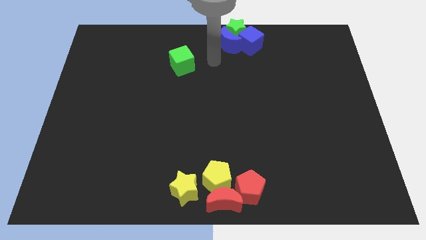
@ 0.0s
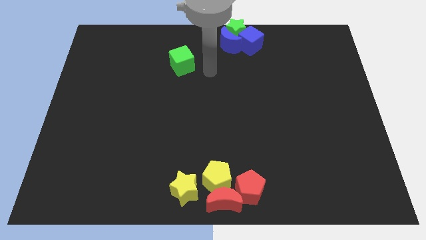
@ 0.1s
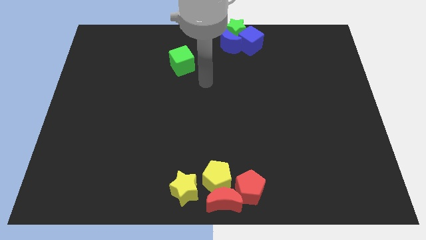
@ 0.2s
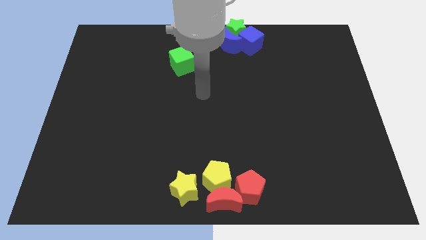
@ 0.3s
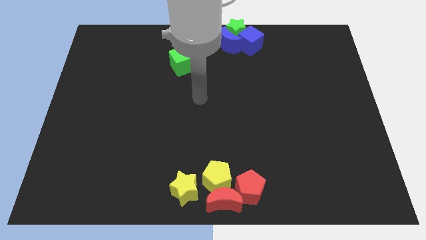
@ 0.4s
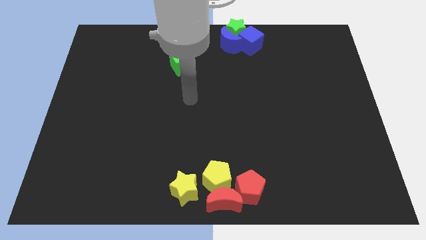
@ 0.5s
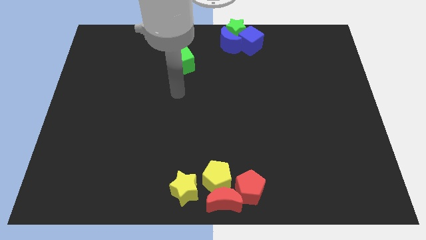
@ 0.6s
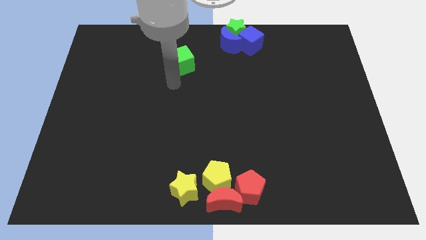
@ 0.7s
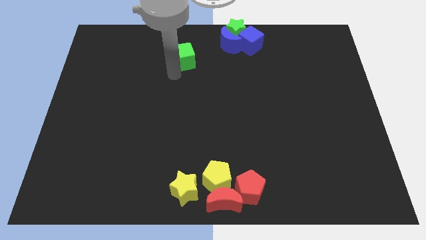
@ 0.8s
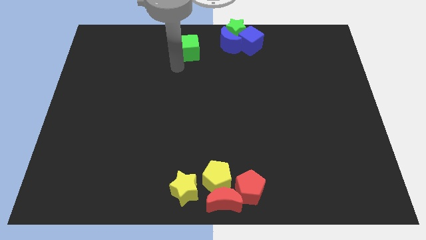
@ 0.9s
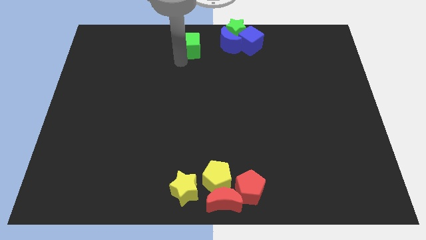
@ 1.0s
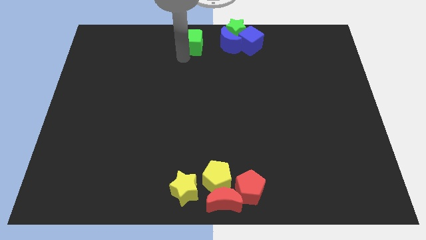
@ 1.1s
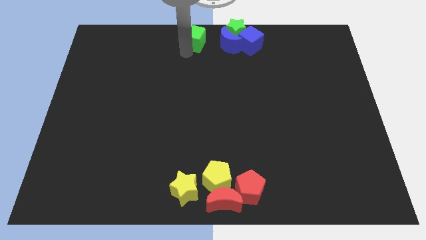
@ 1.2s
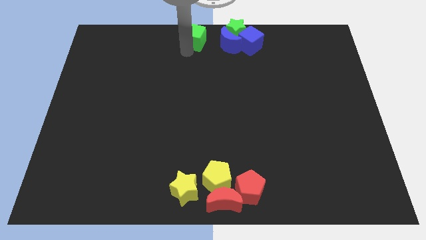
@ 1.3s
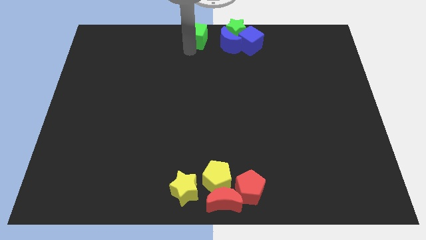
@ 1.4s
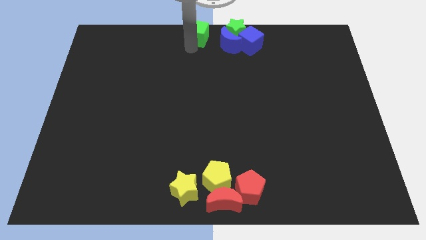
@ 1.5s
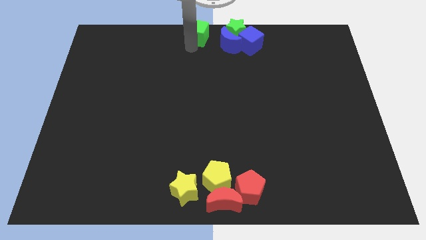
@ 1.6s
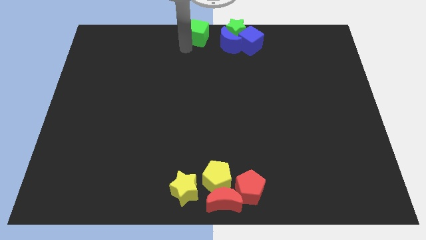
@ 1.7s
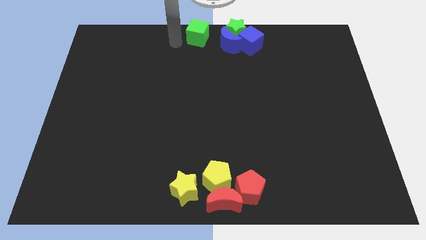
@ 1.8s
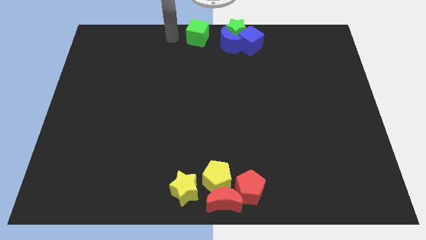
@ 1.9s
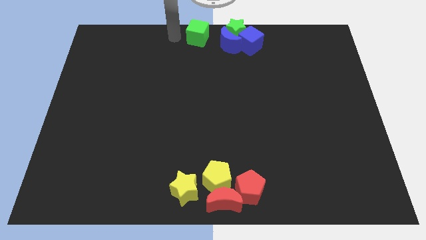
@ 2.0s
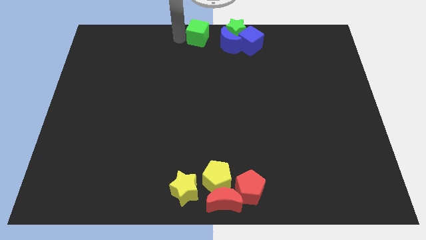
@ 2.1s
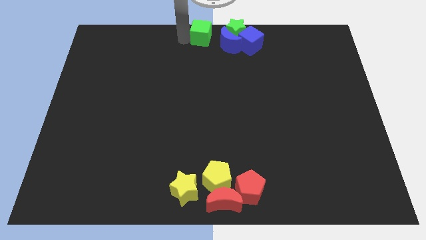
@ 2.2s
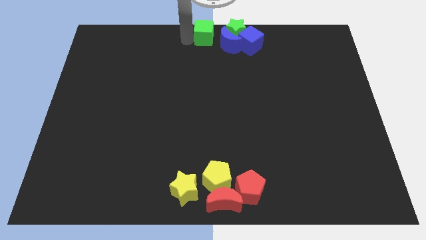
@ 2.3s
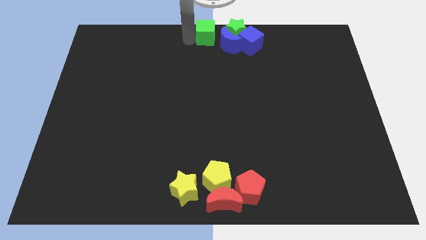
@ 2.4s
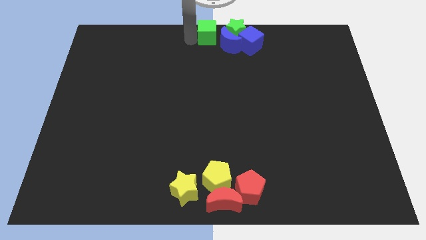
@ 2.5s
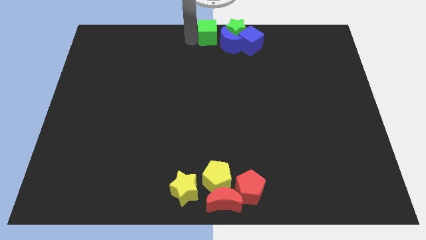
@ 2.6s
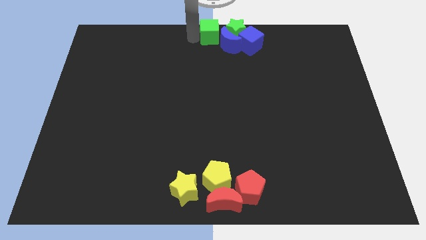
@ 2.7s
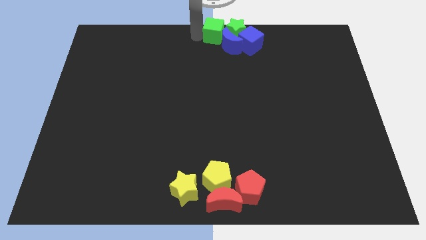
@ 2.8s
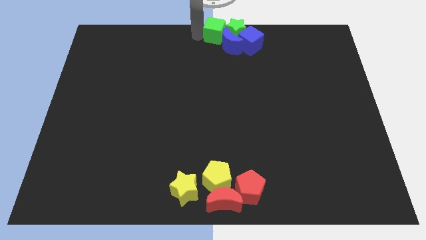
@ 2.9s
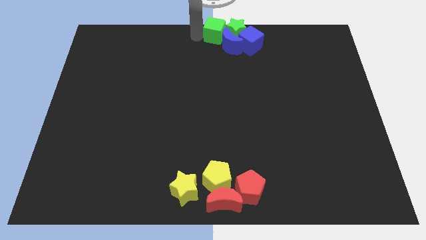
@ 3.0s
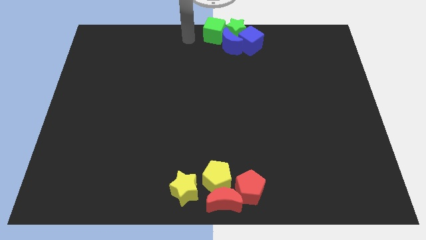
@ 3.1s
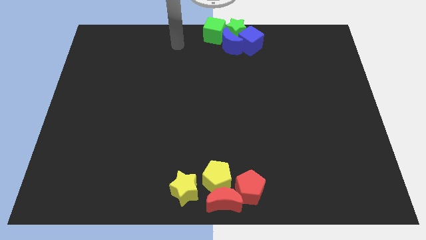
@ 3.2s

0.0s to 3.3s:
push the green cube into the blue crescent to the top center

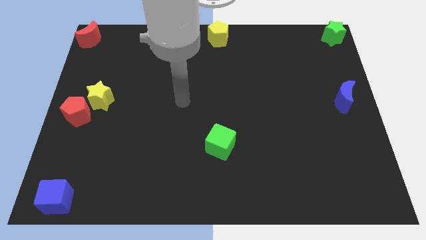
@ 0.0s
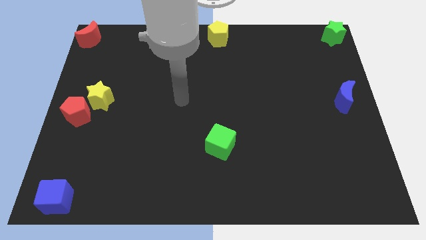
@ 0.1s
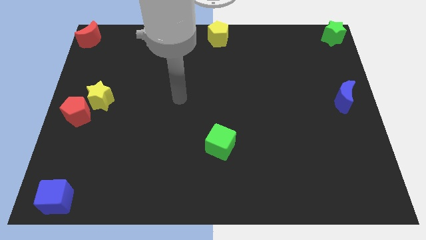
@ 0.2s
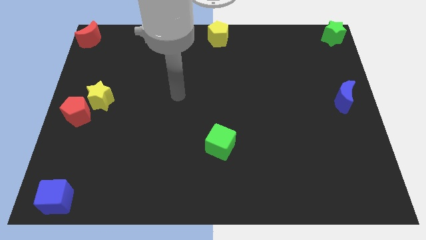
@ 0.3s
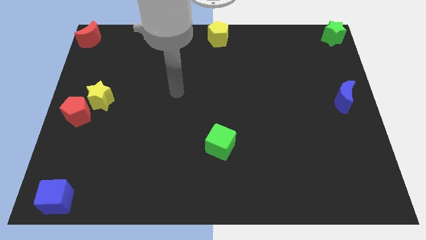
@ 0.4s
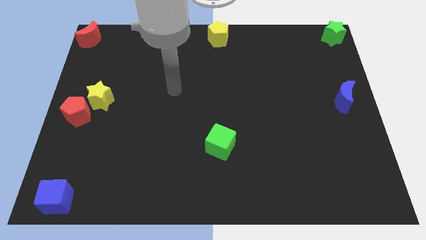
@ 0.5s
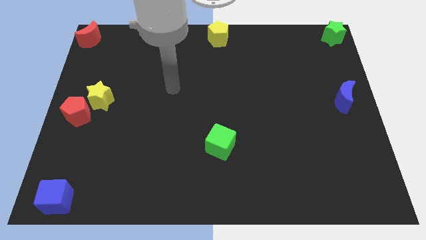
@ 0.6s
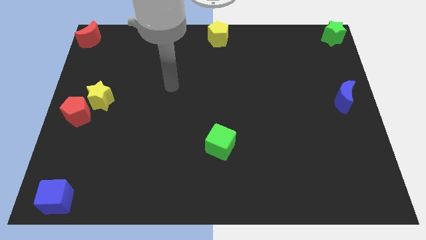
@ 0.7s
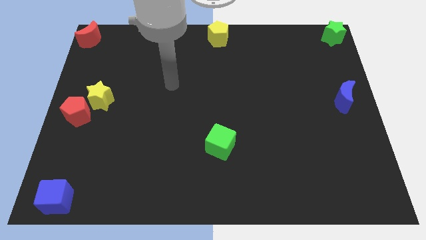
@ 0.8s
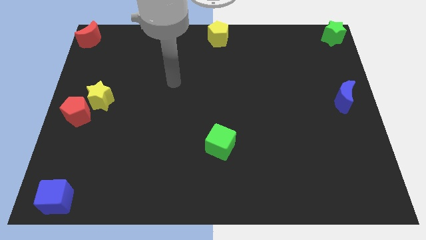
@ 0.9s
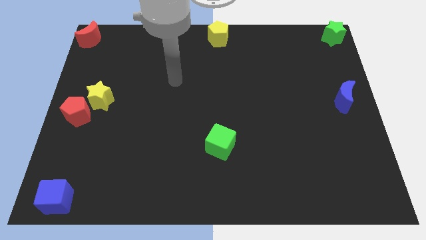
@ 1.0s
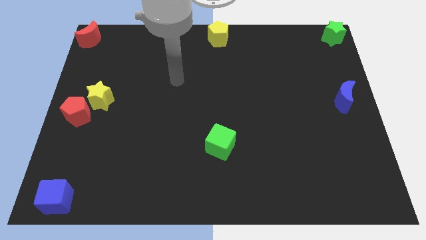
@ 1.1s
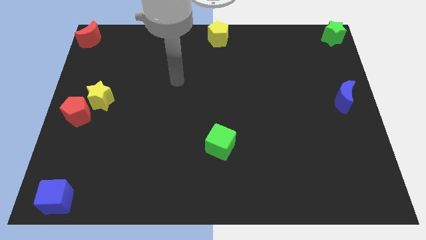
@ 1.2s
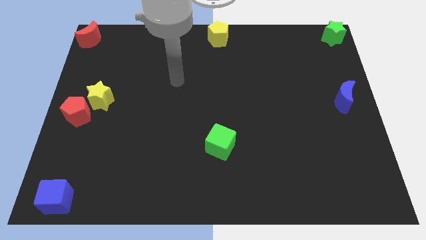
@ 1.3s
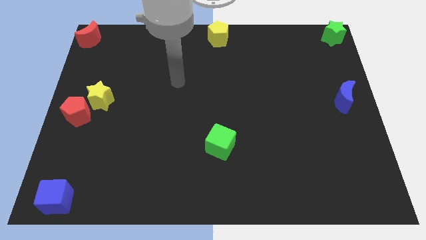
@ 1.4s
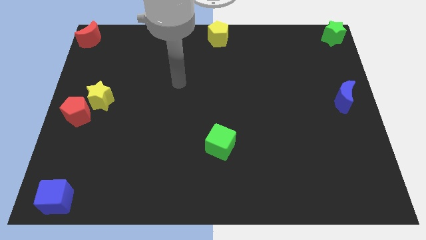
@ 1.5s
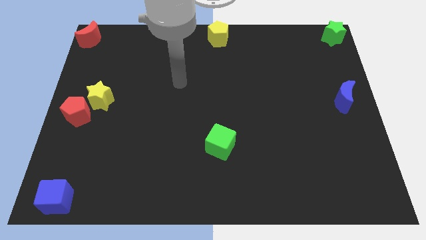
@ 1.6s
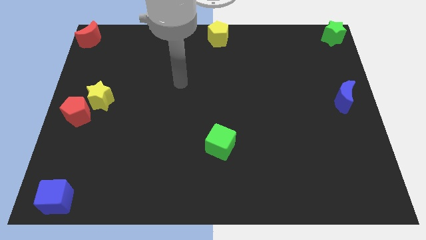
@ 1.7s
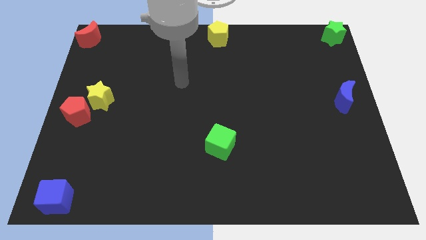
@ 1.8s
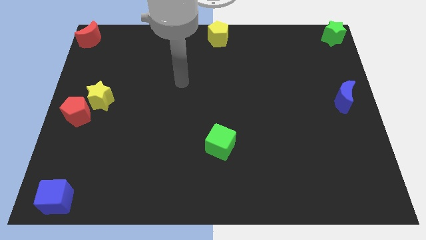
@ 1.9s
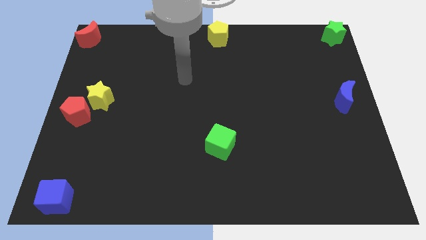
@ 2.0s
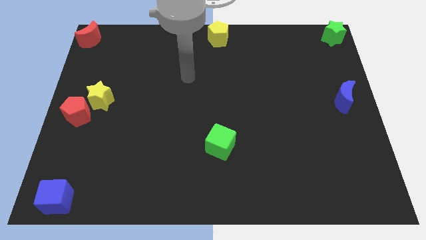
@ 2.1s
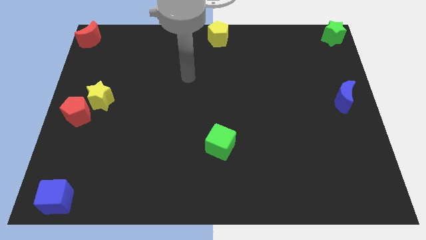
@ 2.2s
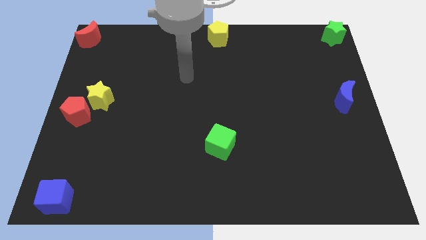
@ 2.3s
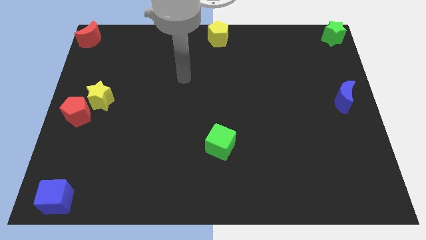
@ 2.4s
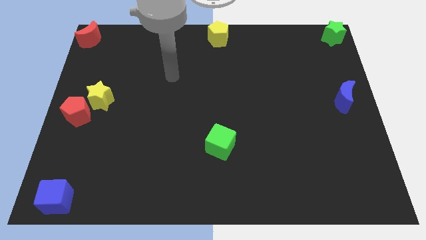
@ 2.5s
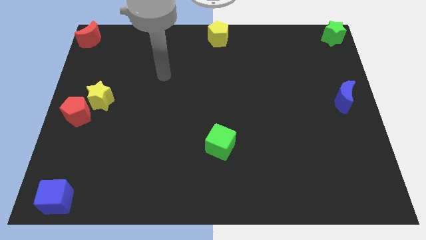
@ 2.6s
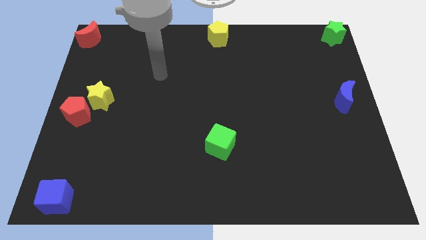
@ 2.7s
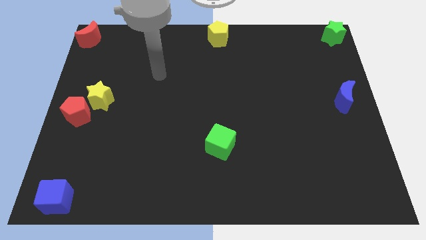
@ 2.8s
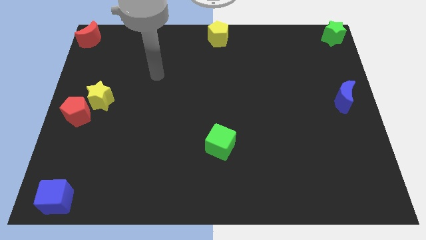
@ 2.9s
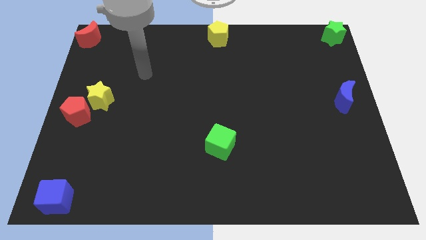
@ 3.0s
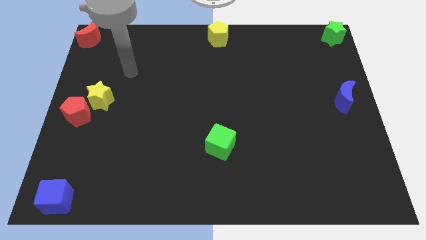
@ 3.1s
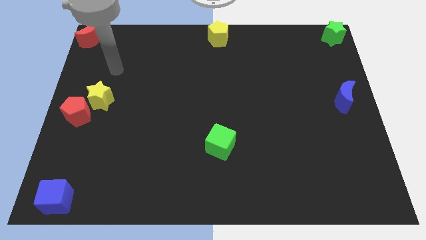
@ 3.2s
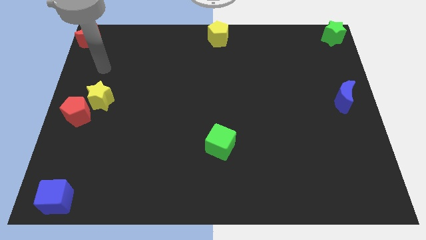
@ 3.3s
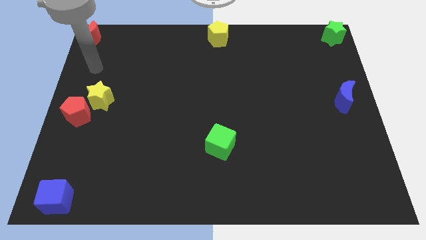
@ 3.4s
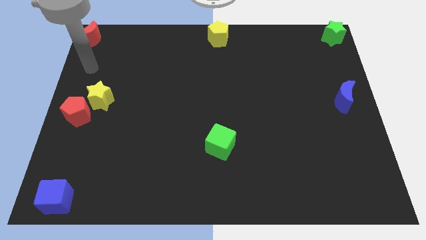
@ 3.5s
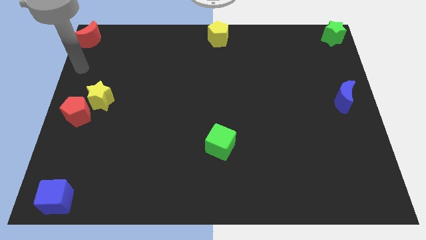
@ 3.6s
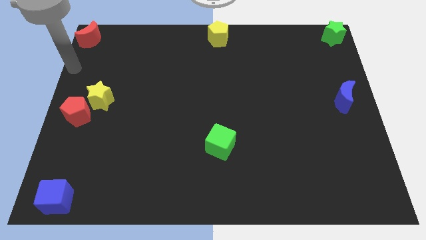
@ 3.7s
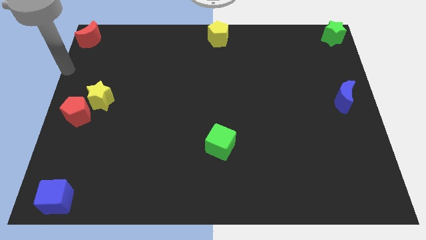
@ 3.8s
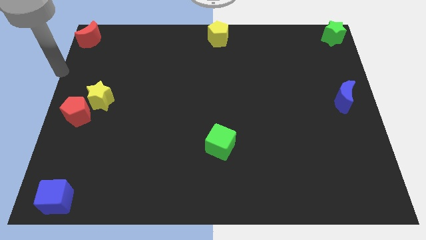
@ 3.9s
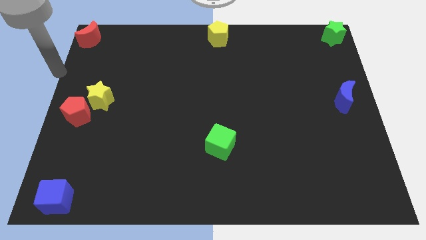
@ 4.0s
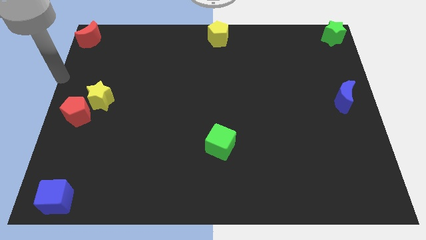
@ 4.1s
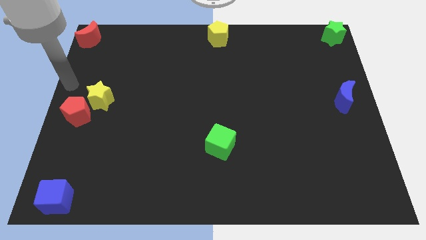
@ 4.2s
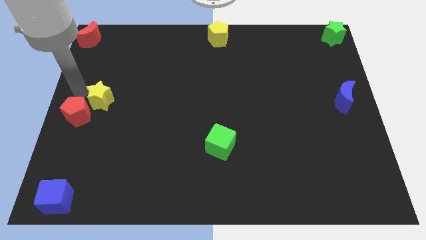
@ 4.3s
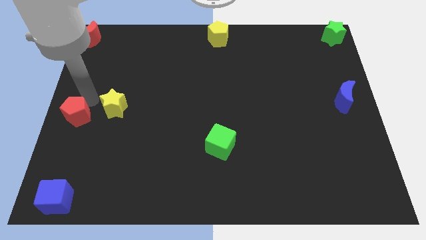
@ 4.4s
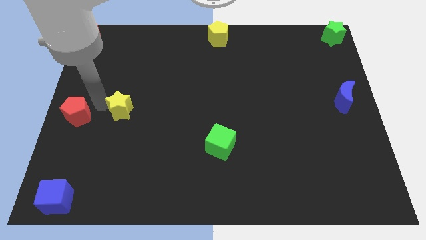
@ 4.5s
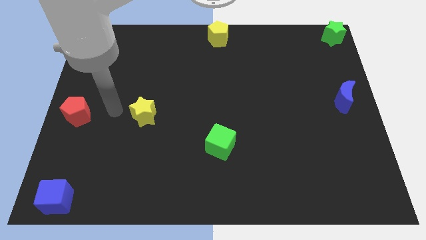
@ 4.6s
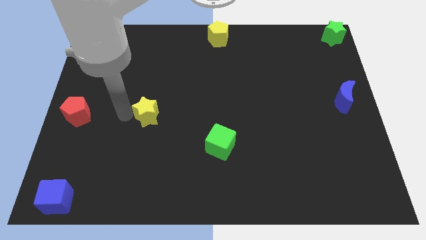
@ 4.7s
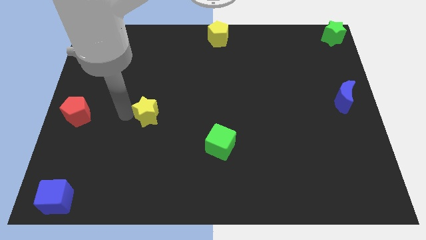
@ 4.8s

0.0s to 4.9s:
separate the yellow star from the red pentagon

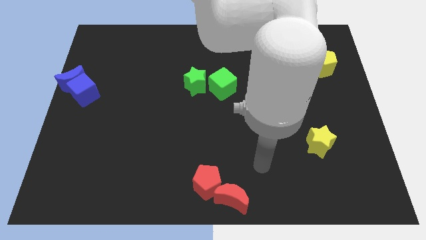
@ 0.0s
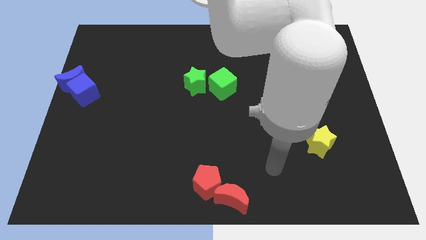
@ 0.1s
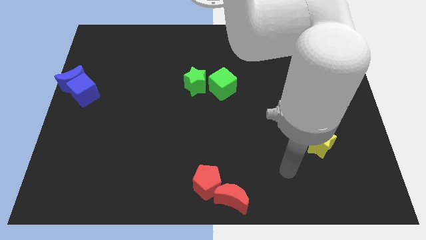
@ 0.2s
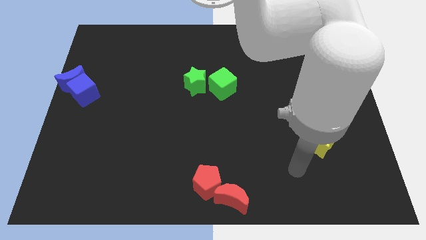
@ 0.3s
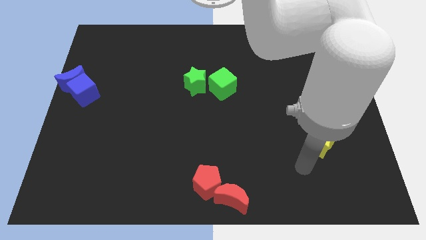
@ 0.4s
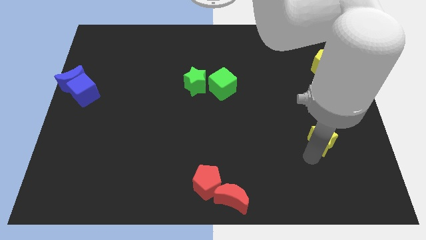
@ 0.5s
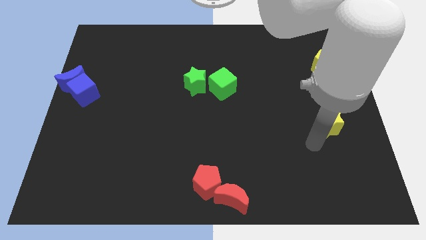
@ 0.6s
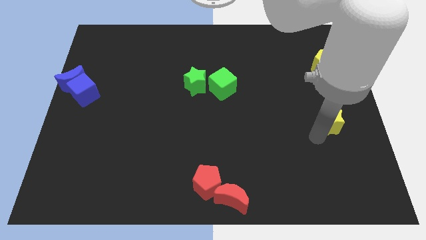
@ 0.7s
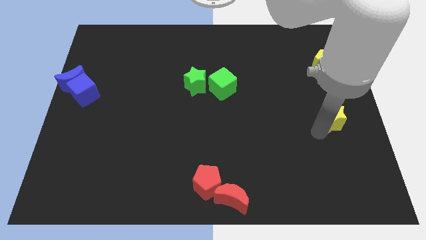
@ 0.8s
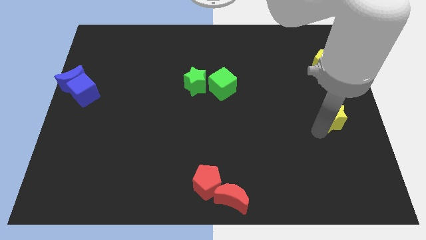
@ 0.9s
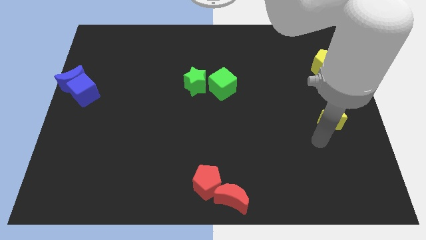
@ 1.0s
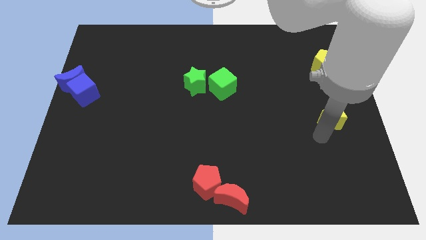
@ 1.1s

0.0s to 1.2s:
place yellow star vertically below the yellow pentagon
